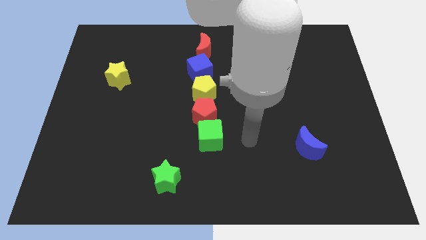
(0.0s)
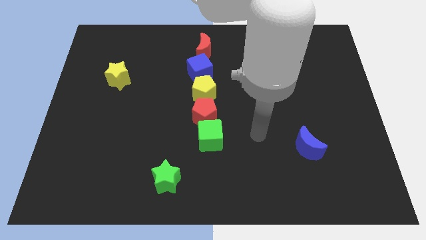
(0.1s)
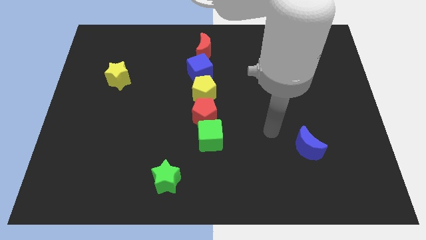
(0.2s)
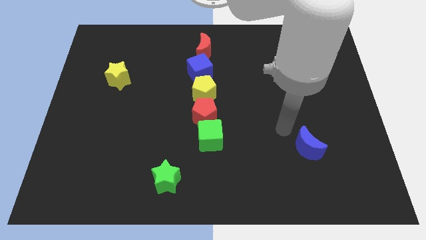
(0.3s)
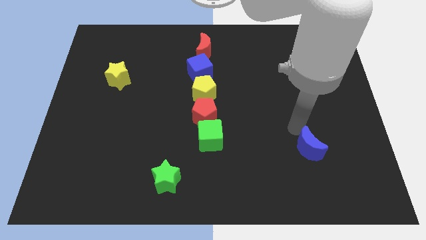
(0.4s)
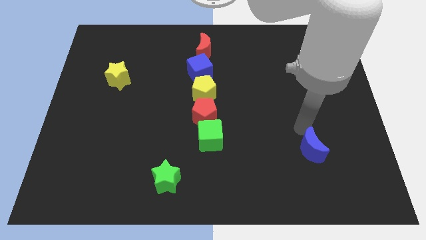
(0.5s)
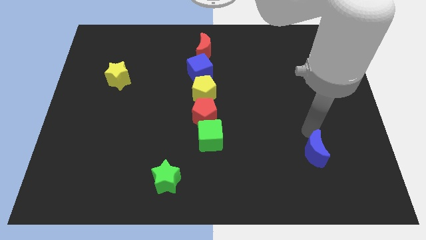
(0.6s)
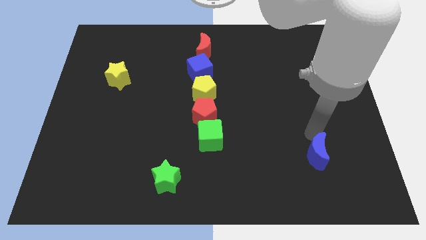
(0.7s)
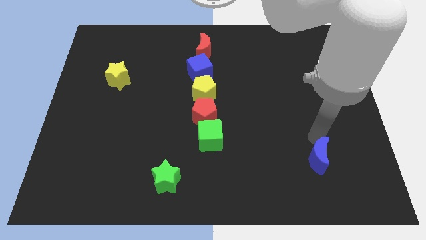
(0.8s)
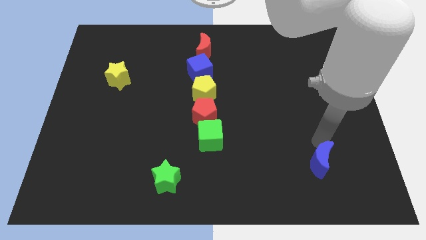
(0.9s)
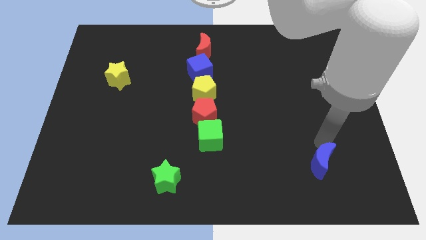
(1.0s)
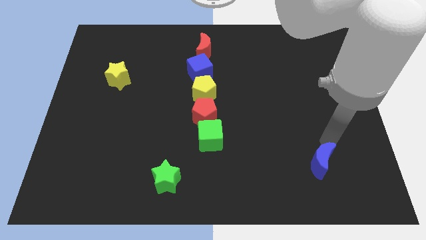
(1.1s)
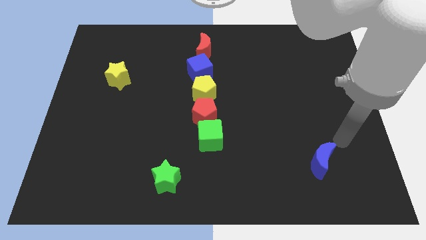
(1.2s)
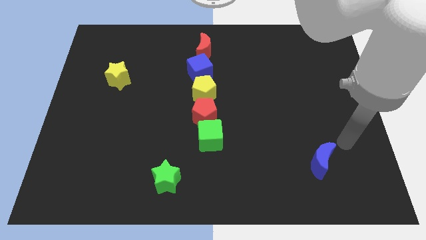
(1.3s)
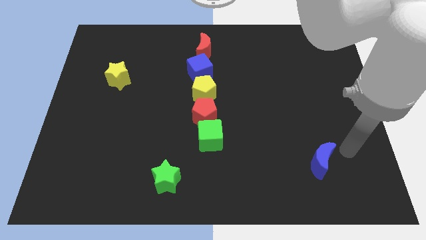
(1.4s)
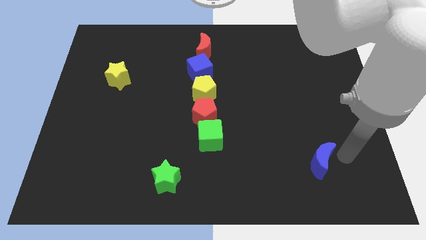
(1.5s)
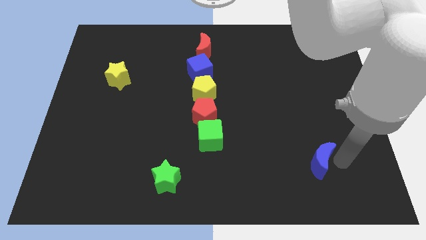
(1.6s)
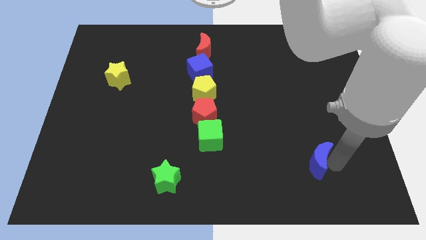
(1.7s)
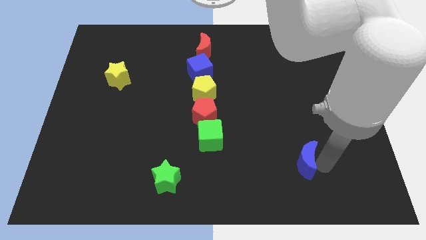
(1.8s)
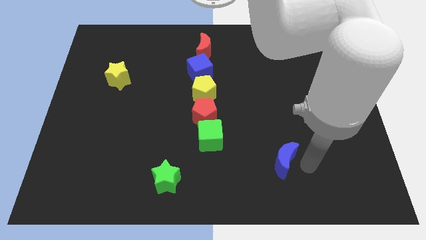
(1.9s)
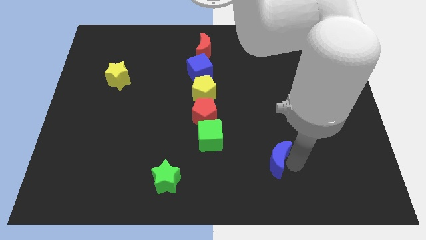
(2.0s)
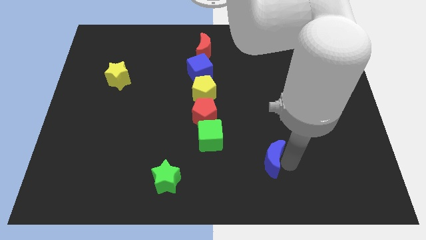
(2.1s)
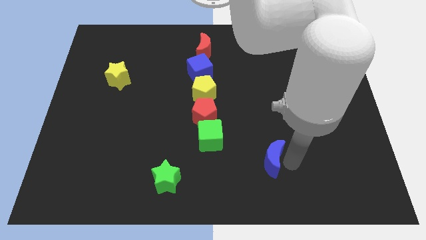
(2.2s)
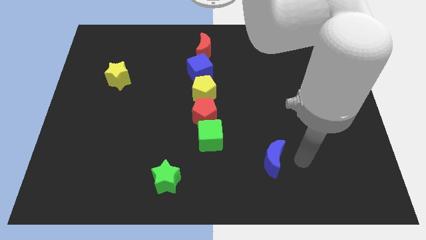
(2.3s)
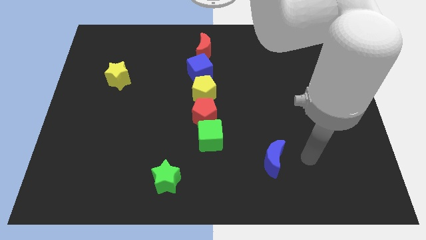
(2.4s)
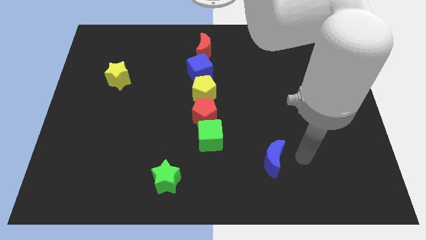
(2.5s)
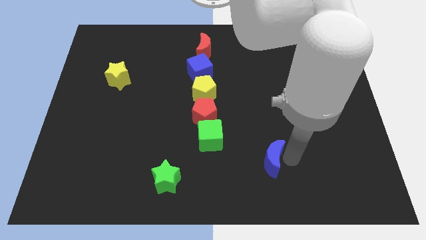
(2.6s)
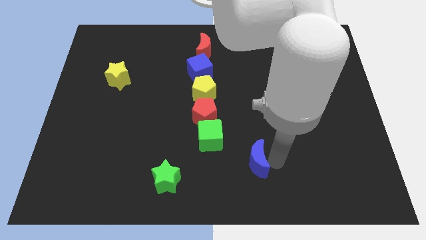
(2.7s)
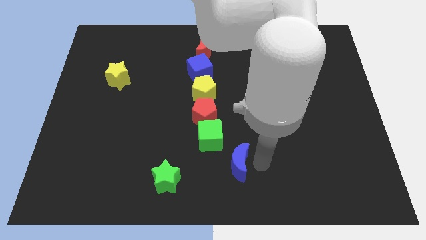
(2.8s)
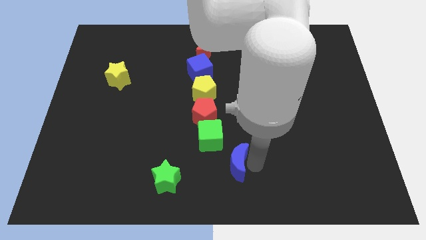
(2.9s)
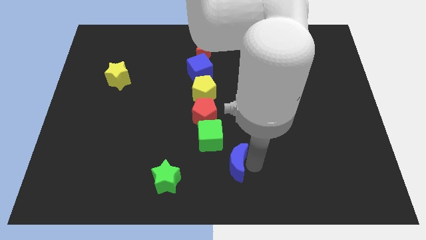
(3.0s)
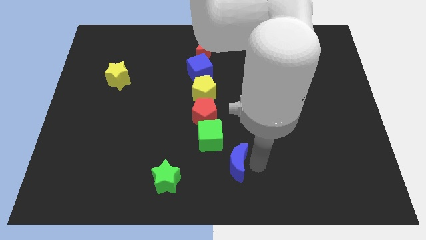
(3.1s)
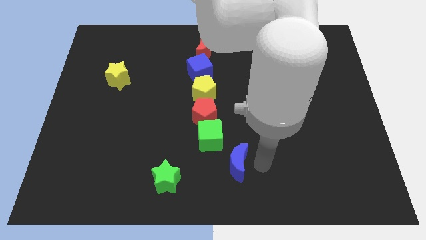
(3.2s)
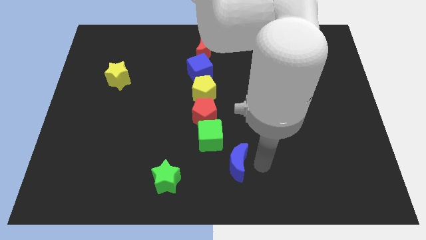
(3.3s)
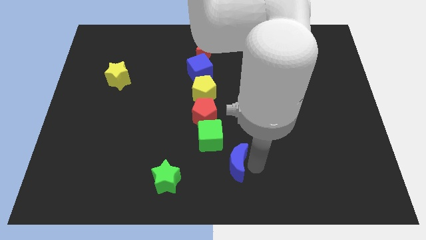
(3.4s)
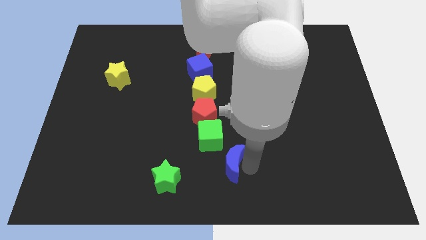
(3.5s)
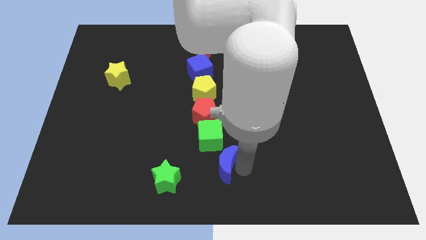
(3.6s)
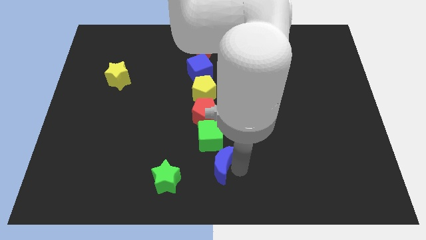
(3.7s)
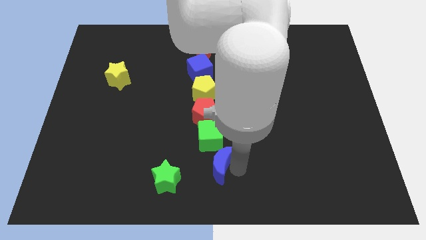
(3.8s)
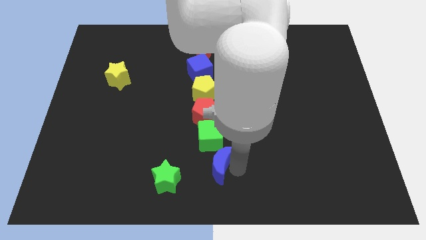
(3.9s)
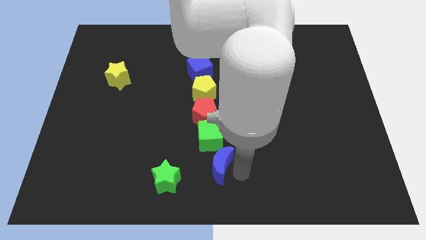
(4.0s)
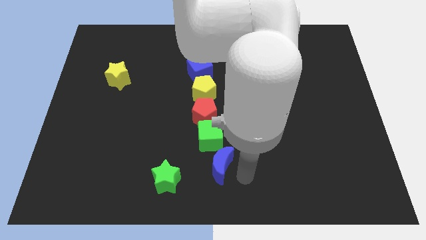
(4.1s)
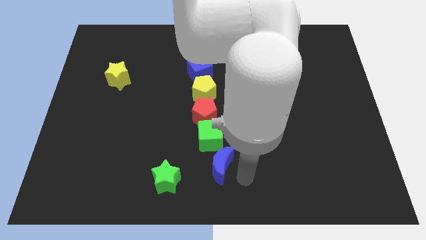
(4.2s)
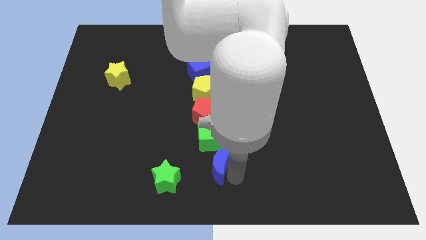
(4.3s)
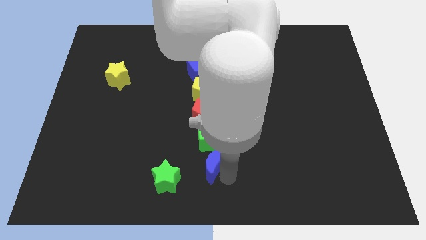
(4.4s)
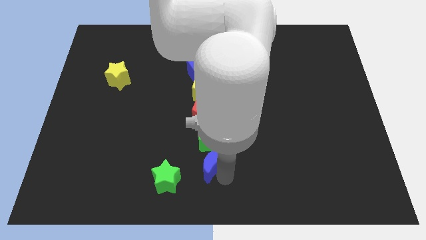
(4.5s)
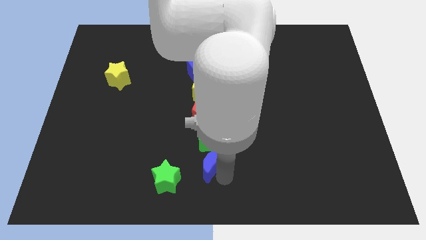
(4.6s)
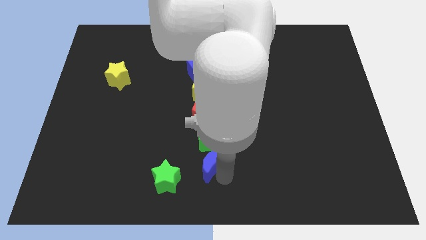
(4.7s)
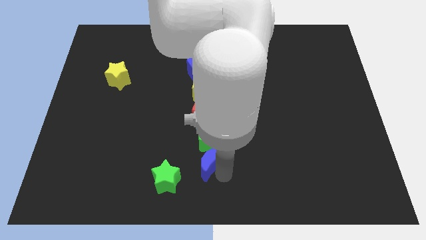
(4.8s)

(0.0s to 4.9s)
move the blue crescent below the green cube

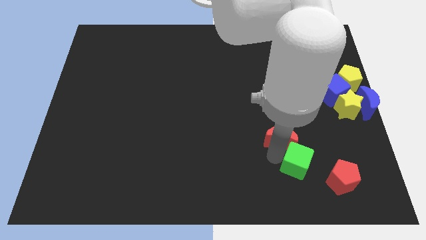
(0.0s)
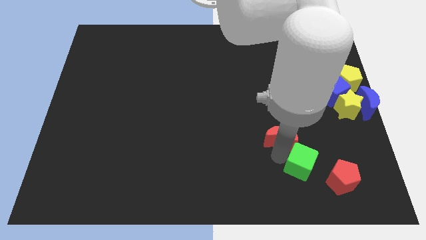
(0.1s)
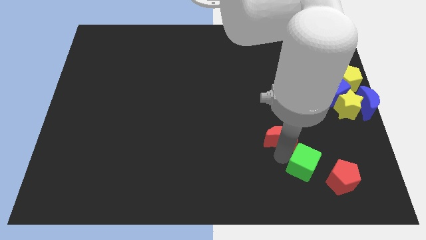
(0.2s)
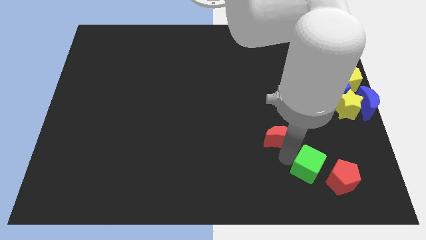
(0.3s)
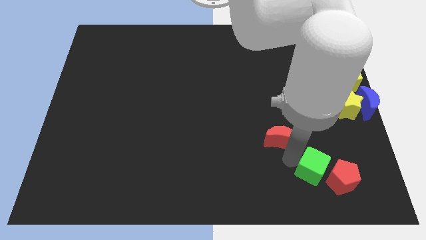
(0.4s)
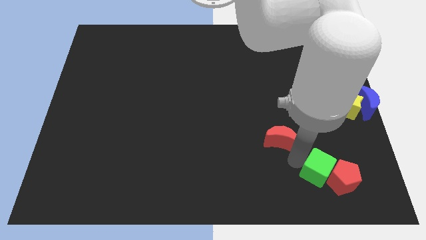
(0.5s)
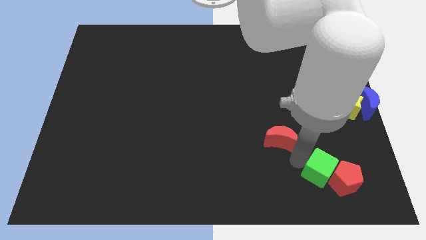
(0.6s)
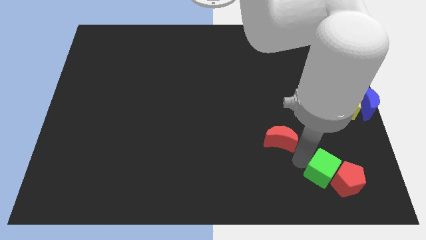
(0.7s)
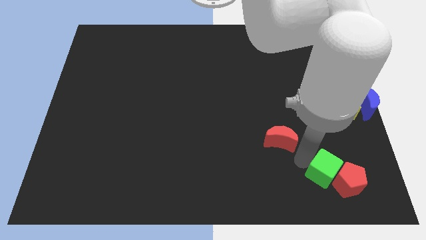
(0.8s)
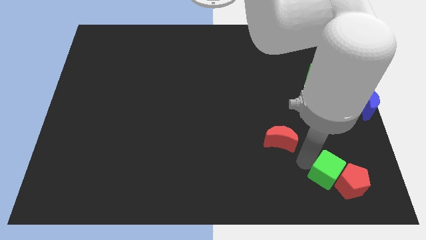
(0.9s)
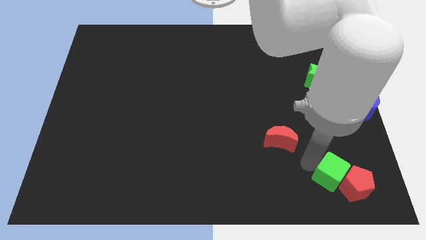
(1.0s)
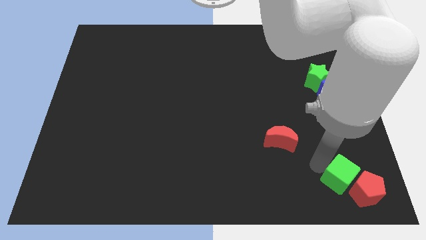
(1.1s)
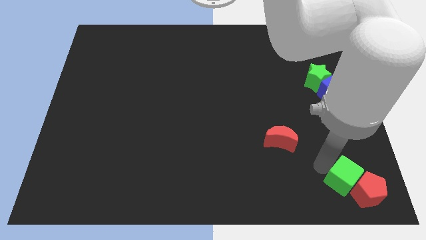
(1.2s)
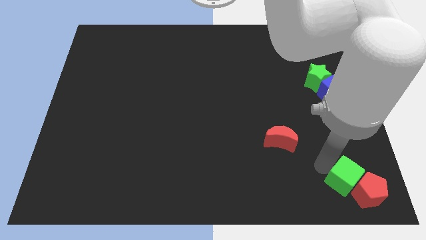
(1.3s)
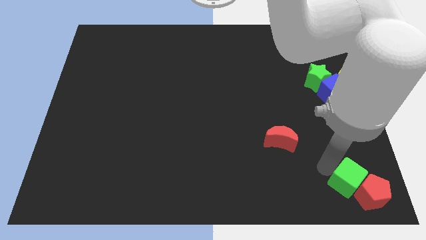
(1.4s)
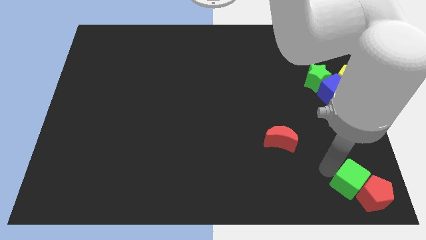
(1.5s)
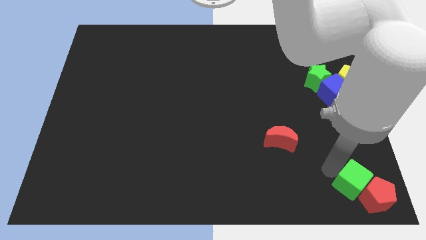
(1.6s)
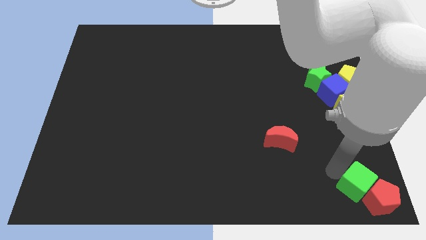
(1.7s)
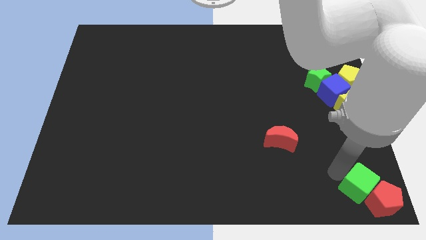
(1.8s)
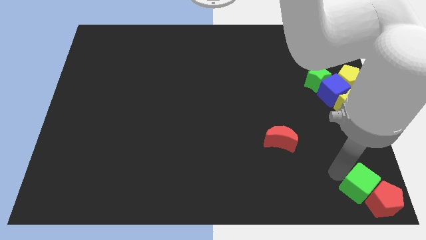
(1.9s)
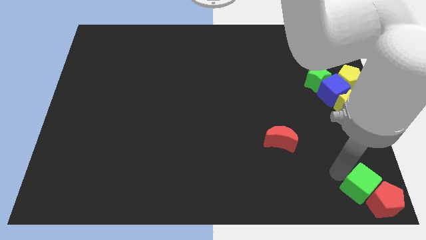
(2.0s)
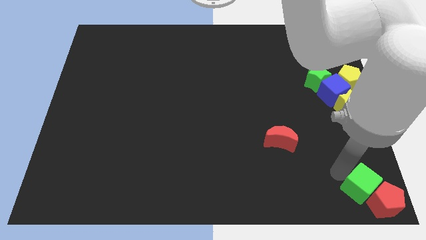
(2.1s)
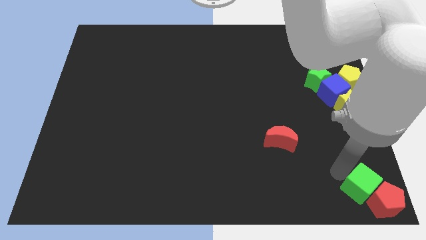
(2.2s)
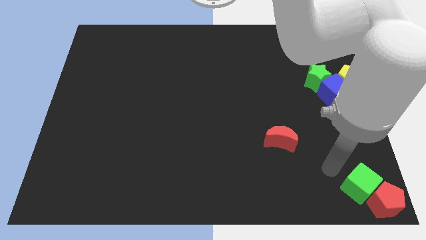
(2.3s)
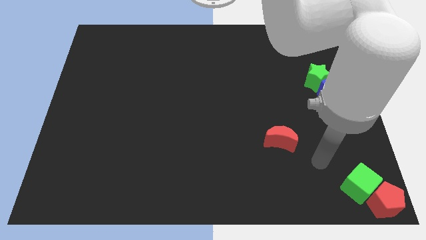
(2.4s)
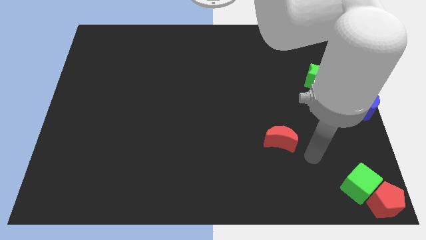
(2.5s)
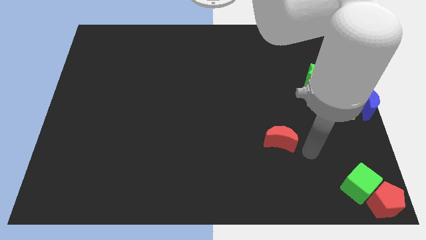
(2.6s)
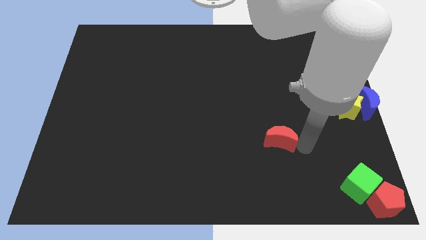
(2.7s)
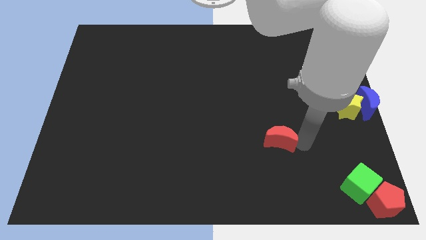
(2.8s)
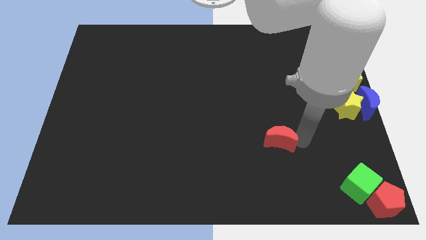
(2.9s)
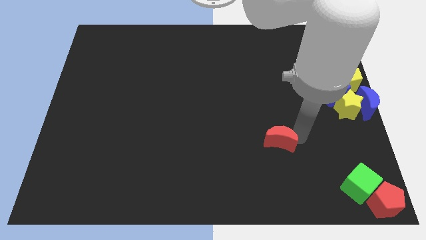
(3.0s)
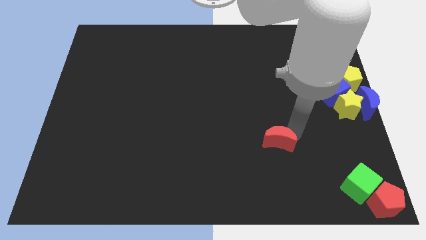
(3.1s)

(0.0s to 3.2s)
push green cube along with red pentagon to the bottom right of the board

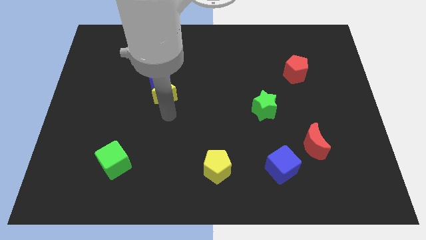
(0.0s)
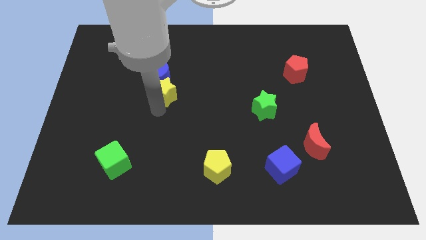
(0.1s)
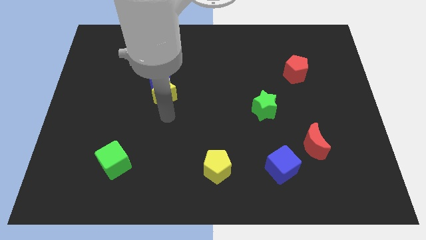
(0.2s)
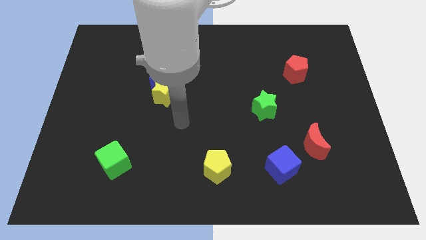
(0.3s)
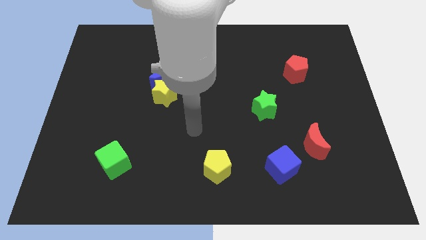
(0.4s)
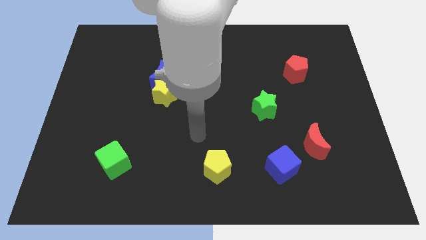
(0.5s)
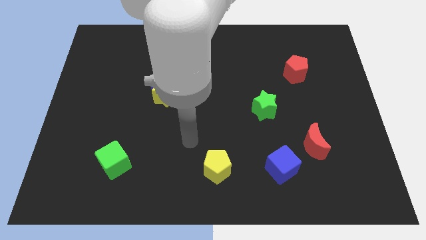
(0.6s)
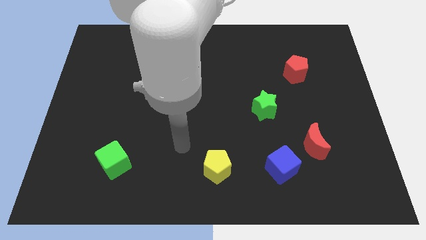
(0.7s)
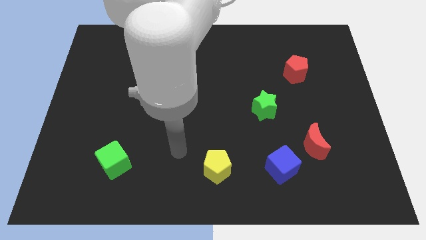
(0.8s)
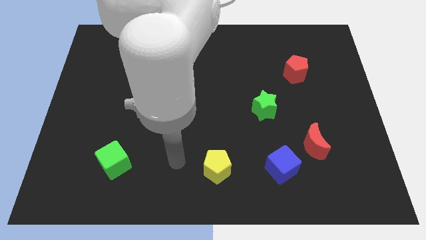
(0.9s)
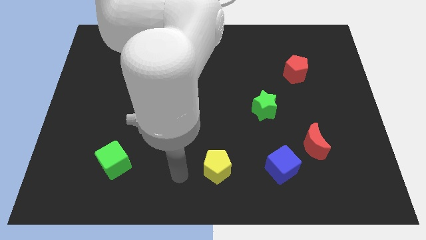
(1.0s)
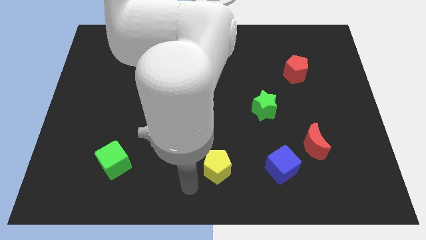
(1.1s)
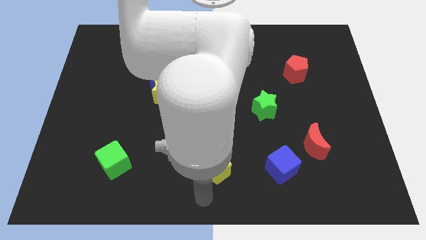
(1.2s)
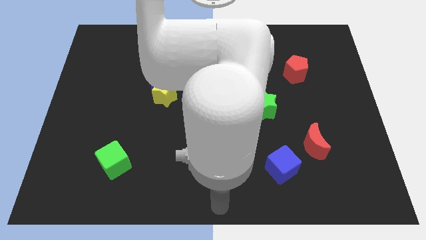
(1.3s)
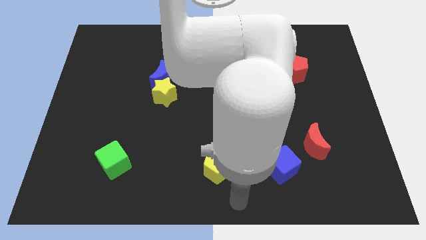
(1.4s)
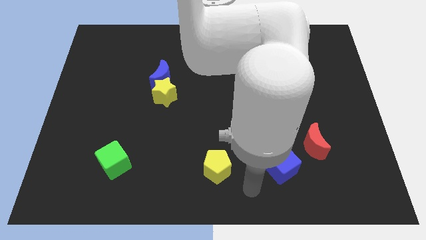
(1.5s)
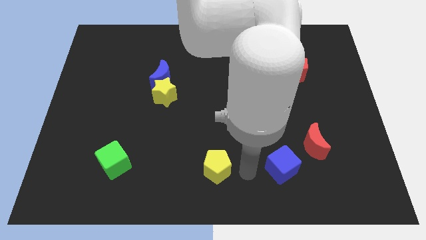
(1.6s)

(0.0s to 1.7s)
place your arm in between blue cube and yellow pentagon
